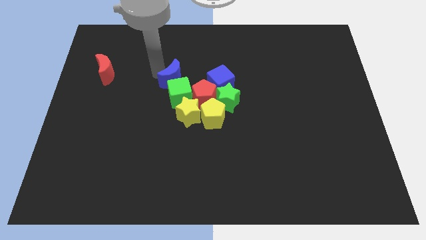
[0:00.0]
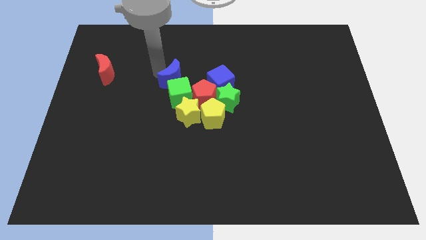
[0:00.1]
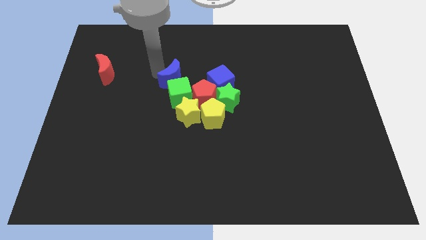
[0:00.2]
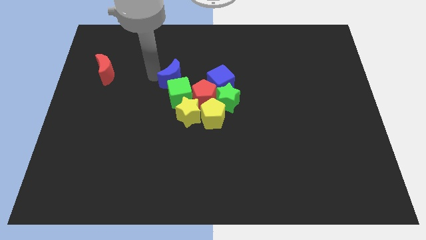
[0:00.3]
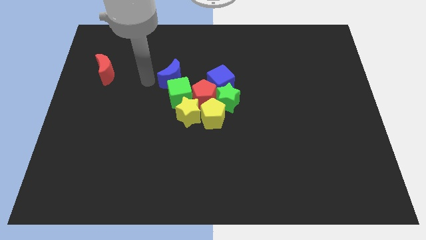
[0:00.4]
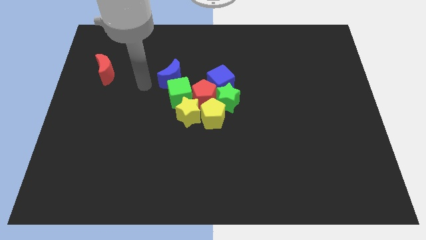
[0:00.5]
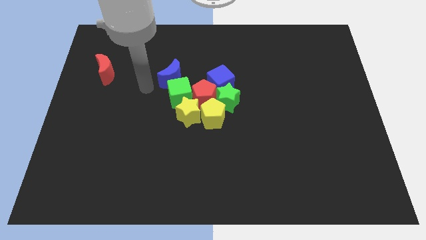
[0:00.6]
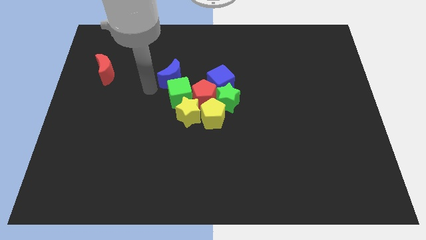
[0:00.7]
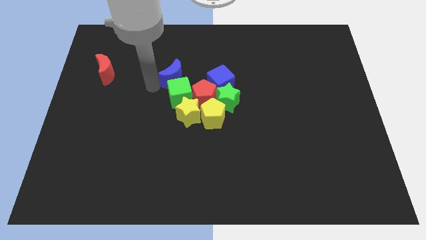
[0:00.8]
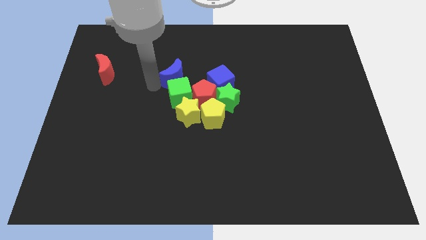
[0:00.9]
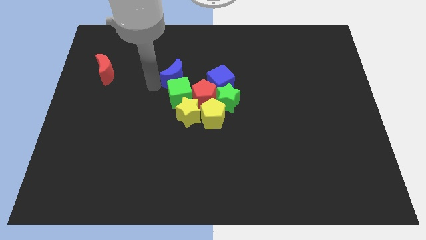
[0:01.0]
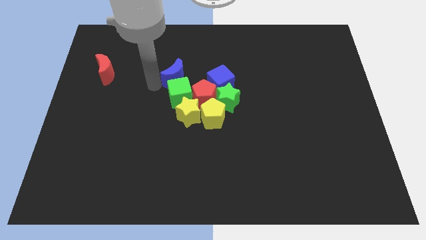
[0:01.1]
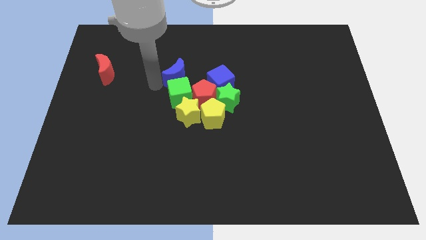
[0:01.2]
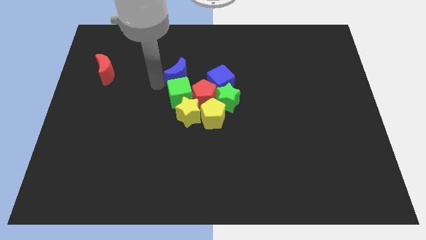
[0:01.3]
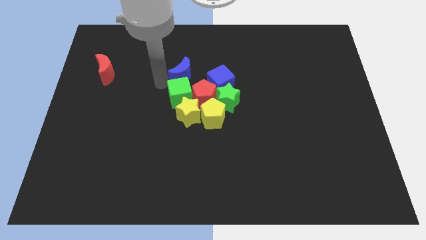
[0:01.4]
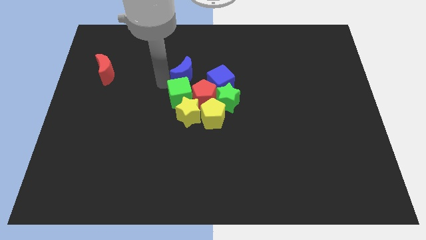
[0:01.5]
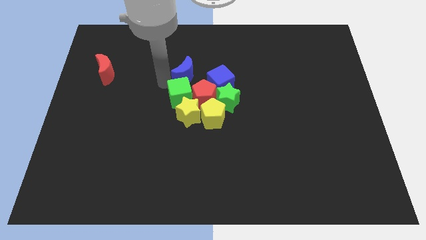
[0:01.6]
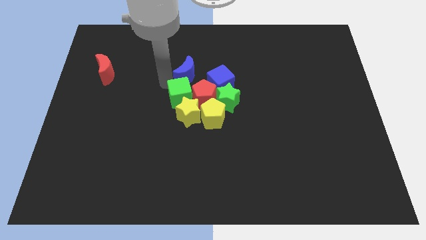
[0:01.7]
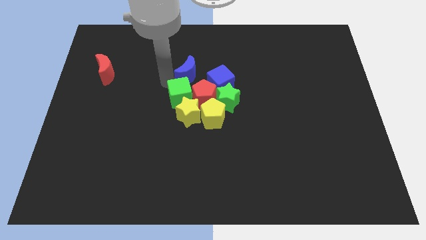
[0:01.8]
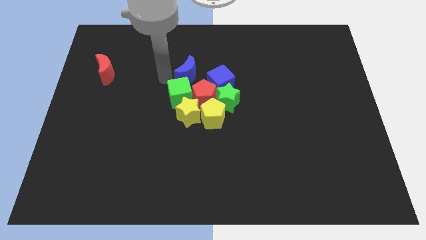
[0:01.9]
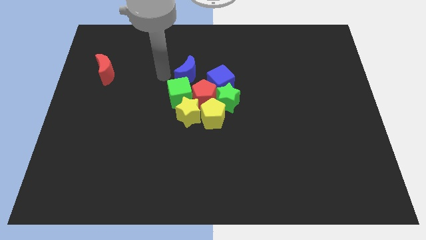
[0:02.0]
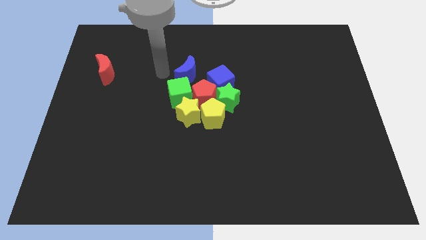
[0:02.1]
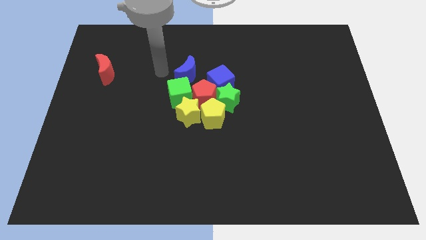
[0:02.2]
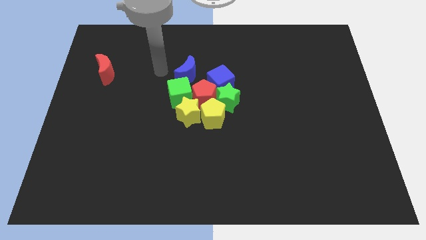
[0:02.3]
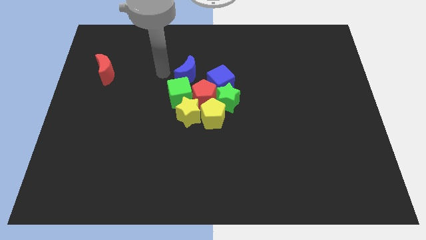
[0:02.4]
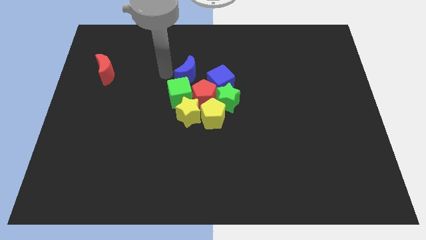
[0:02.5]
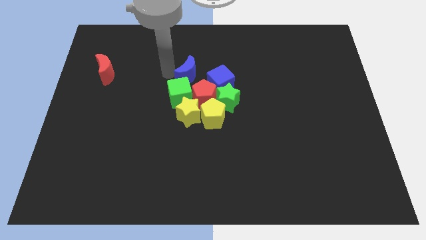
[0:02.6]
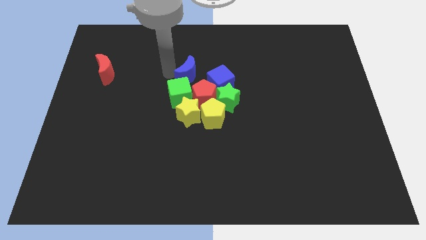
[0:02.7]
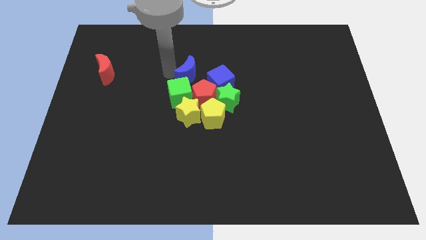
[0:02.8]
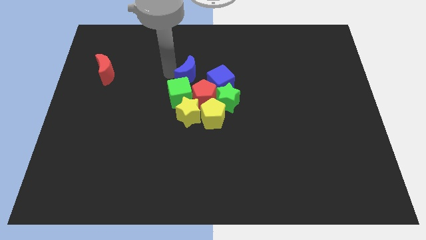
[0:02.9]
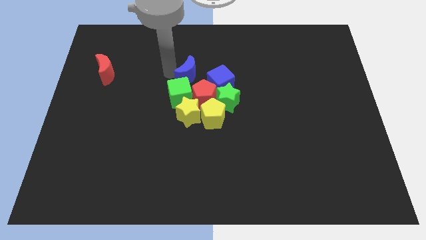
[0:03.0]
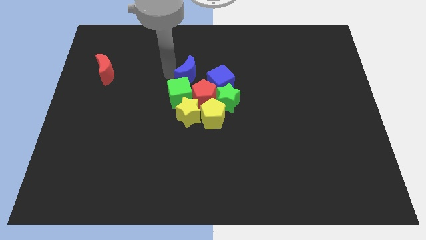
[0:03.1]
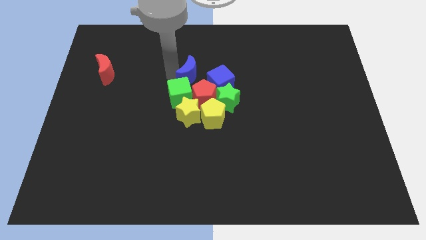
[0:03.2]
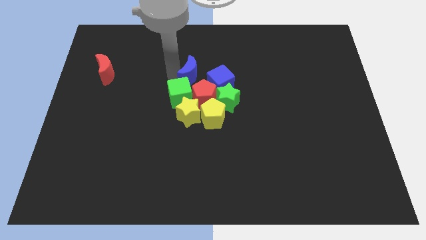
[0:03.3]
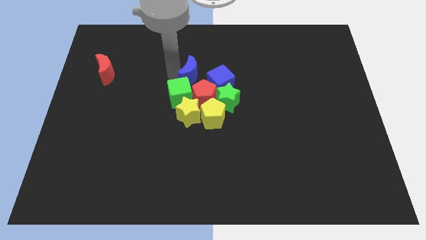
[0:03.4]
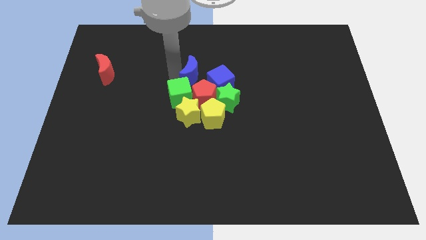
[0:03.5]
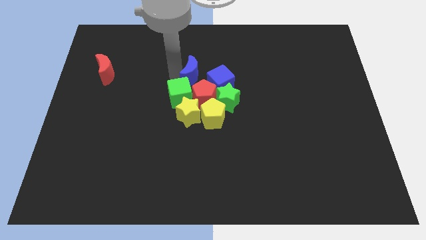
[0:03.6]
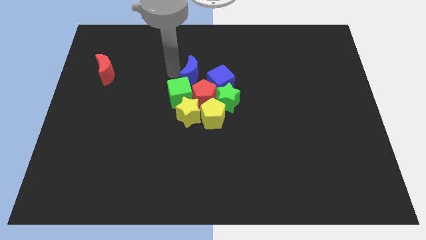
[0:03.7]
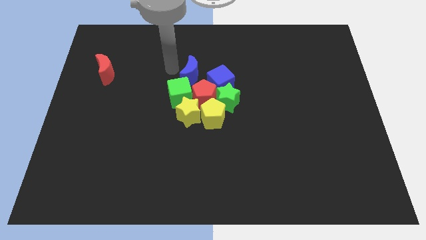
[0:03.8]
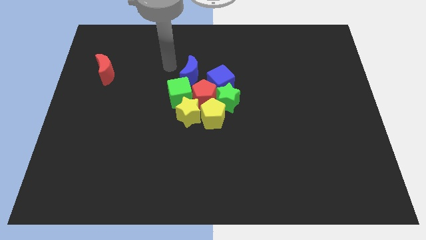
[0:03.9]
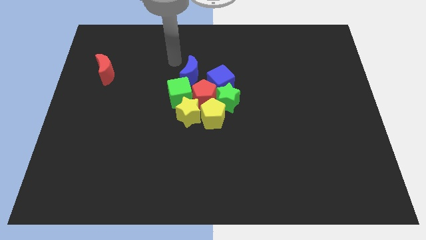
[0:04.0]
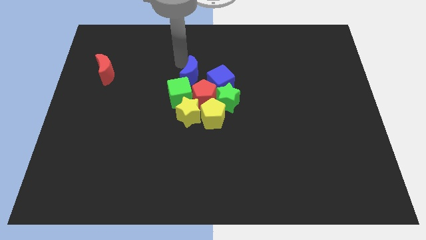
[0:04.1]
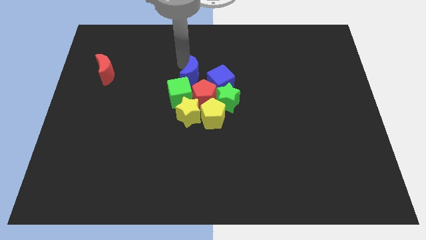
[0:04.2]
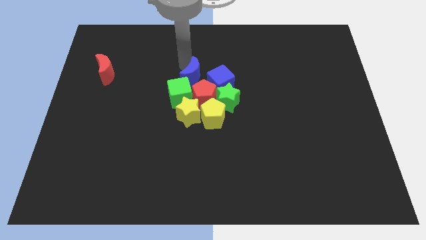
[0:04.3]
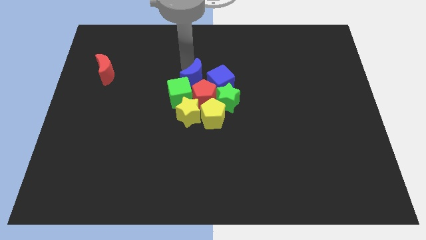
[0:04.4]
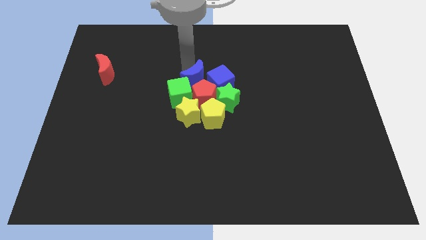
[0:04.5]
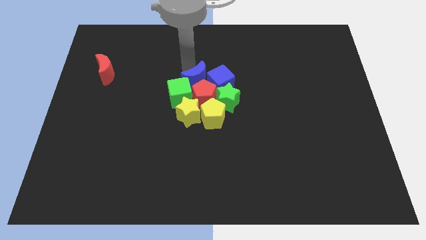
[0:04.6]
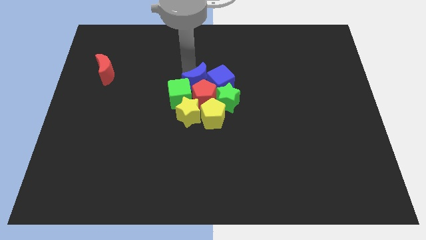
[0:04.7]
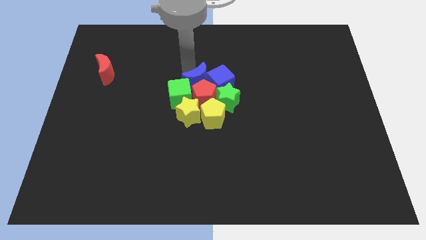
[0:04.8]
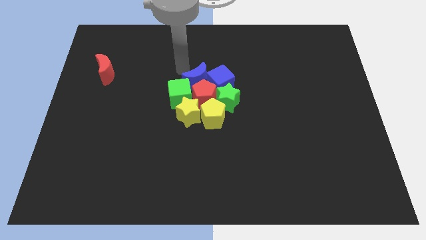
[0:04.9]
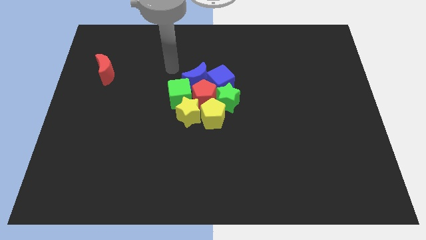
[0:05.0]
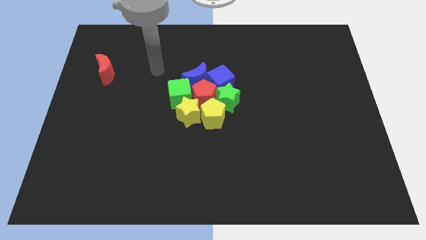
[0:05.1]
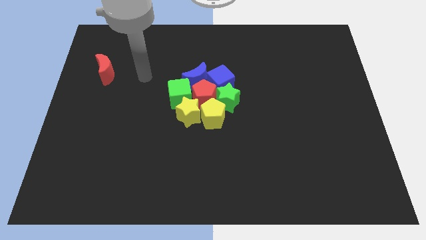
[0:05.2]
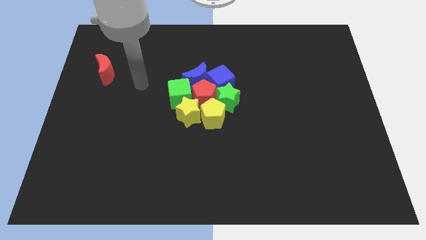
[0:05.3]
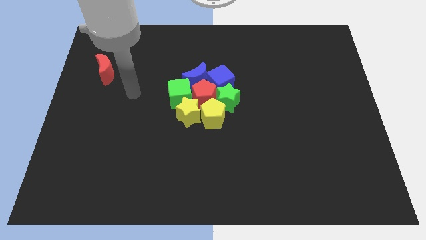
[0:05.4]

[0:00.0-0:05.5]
push the blue moon left to the blue cube

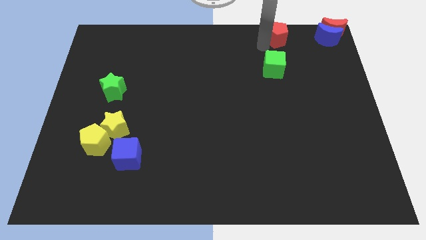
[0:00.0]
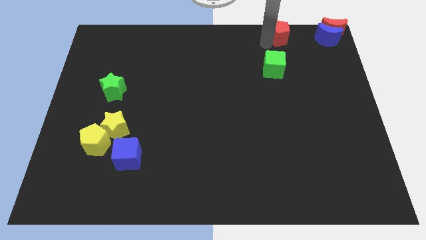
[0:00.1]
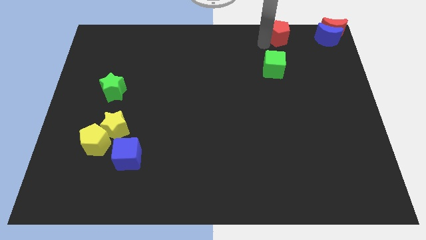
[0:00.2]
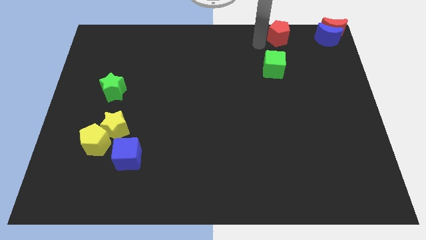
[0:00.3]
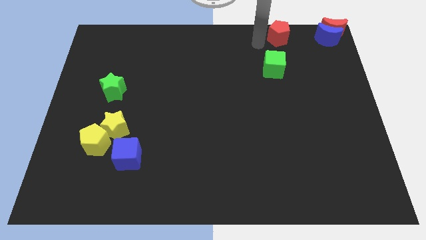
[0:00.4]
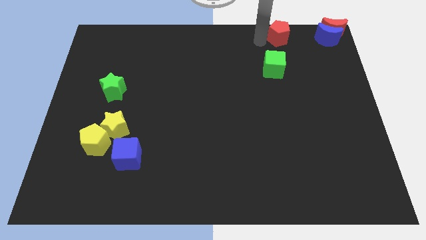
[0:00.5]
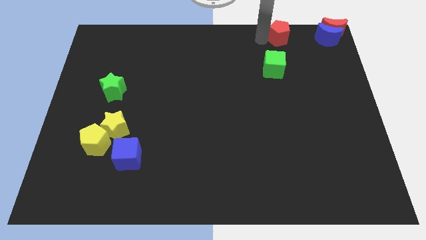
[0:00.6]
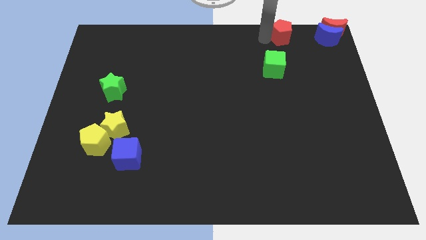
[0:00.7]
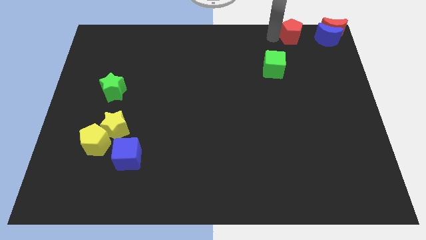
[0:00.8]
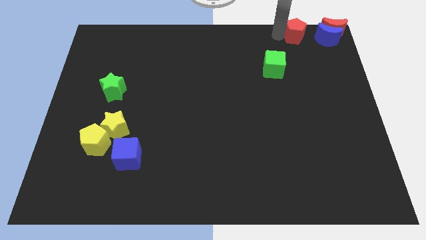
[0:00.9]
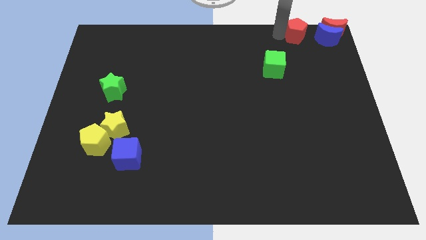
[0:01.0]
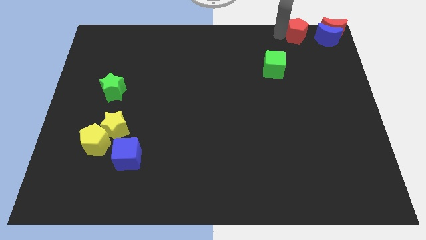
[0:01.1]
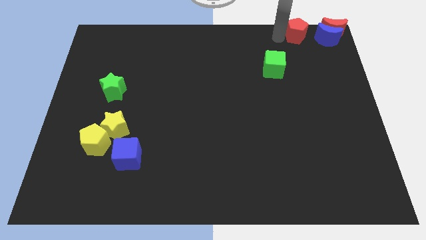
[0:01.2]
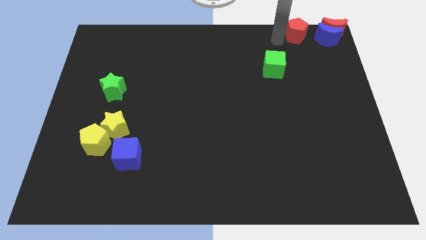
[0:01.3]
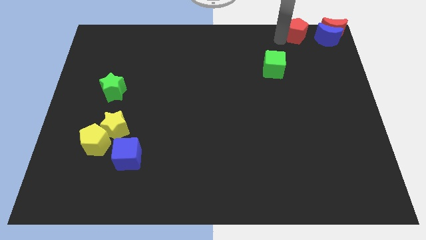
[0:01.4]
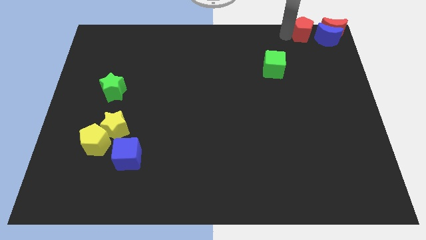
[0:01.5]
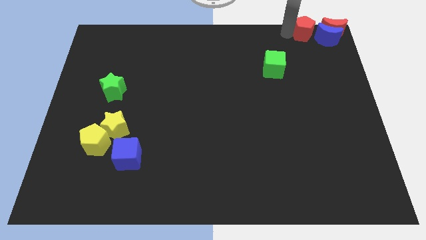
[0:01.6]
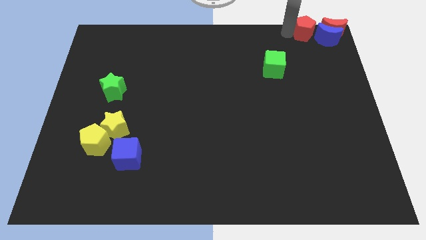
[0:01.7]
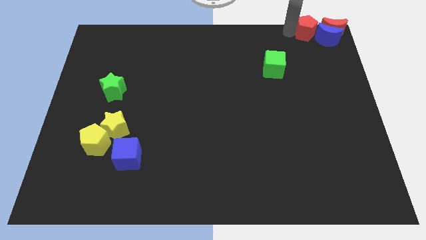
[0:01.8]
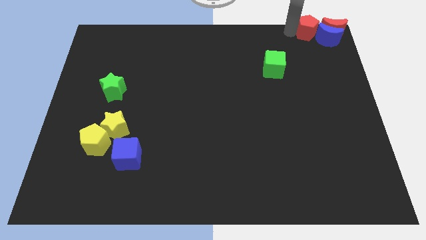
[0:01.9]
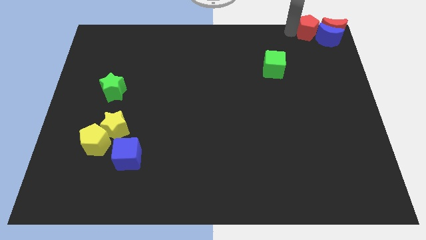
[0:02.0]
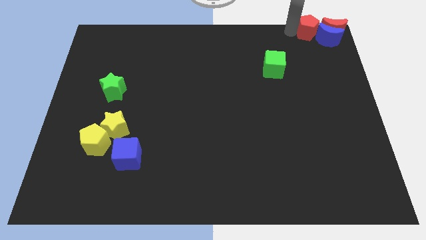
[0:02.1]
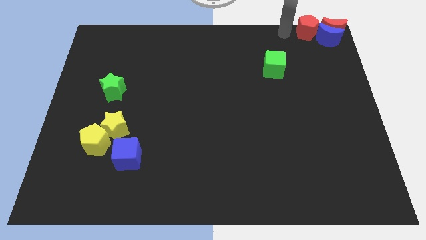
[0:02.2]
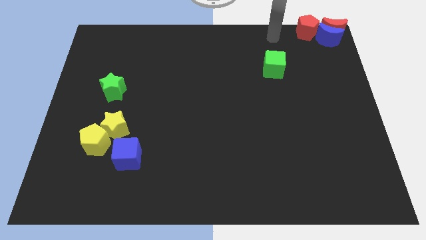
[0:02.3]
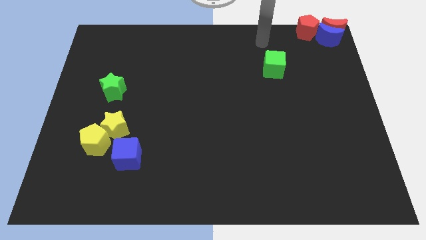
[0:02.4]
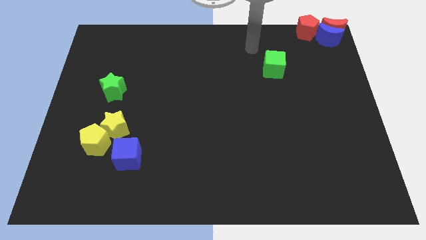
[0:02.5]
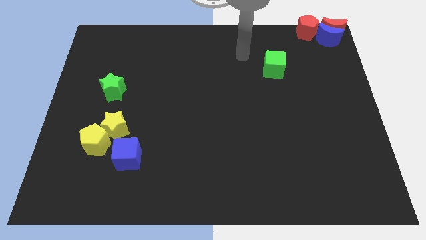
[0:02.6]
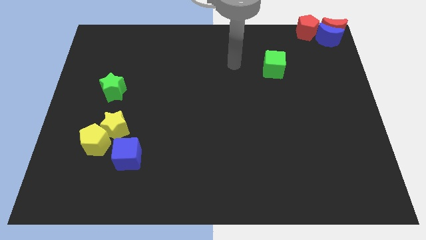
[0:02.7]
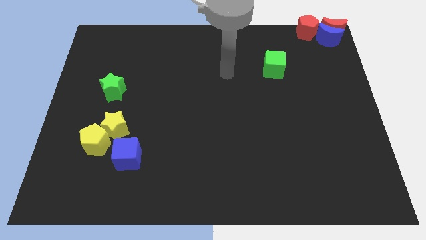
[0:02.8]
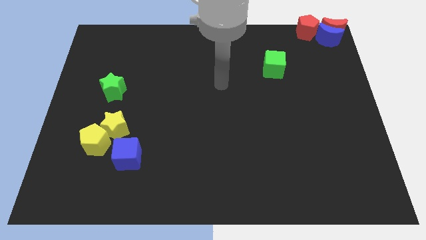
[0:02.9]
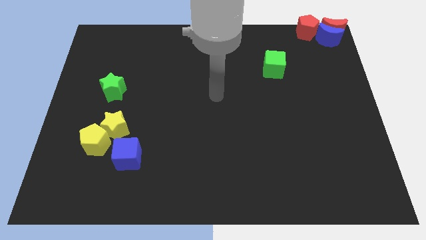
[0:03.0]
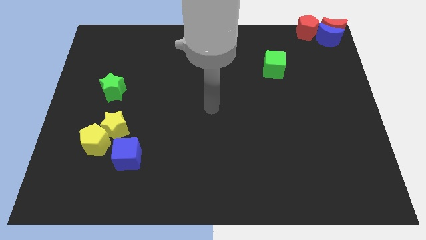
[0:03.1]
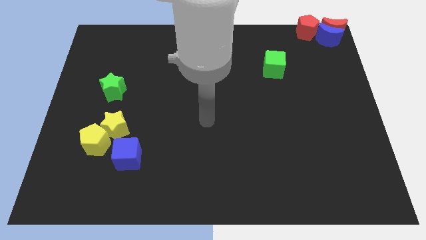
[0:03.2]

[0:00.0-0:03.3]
place the red crescent at the top right corner

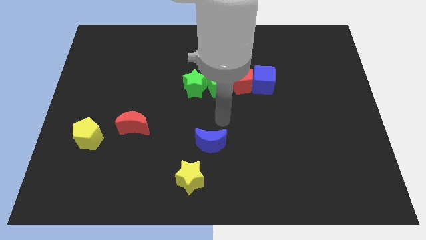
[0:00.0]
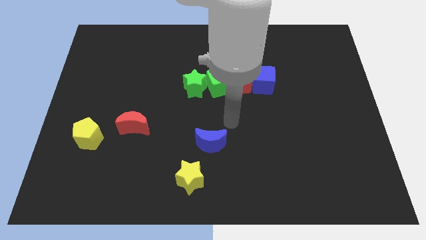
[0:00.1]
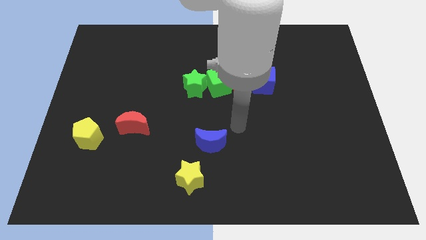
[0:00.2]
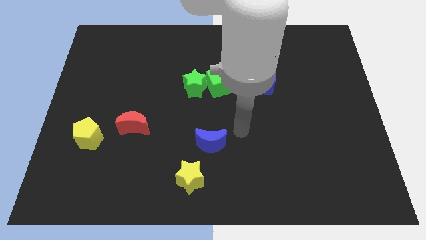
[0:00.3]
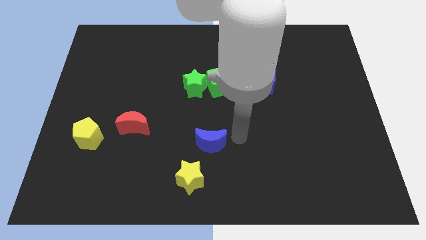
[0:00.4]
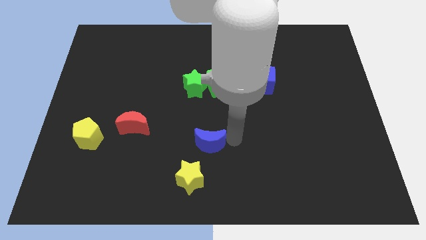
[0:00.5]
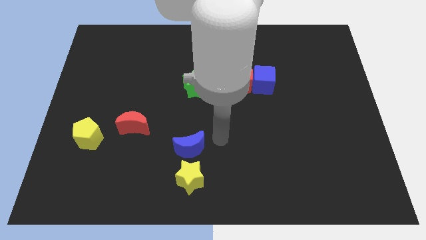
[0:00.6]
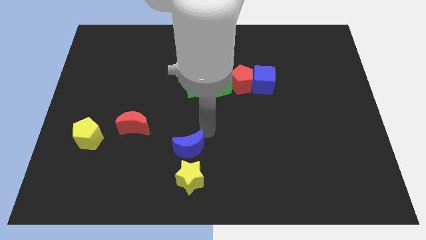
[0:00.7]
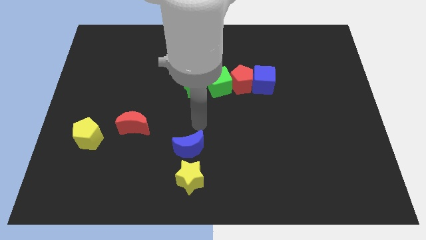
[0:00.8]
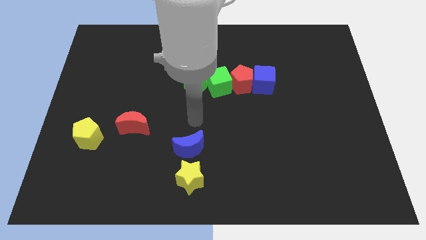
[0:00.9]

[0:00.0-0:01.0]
place blue crescent on top of the yellow star
